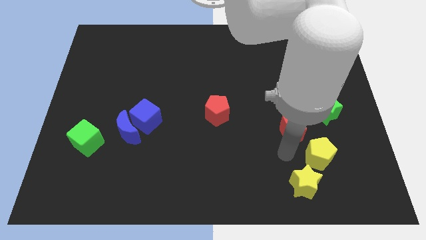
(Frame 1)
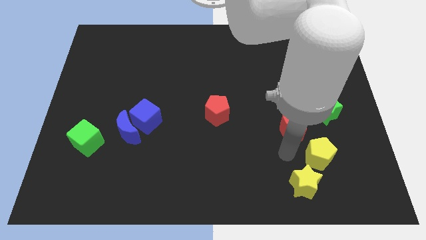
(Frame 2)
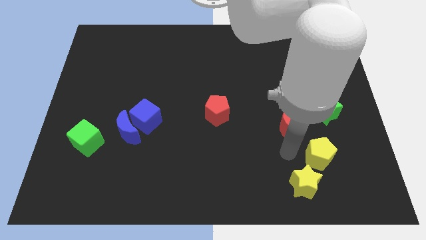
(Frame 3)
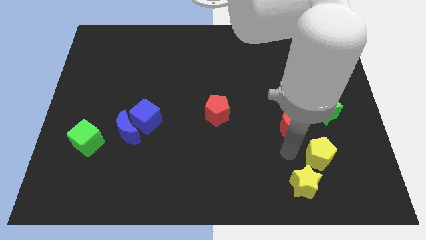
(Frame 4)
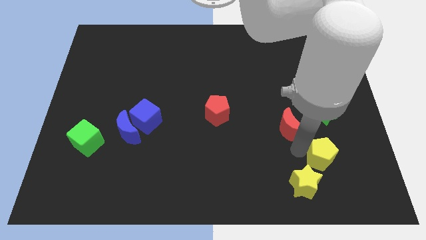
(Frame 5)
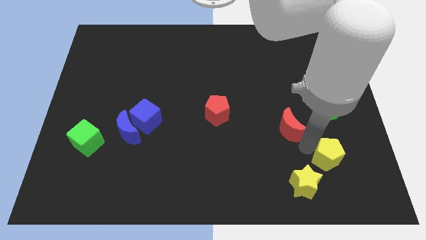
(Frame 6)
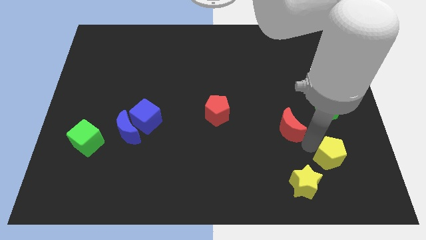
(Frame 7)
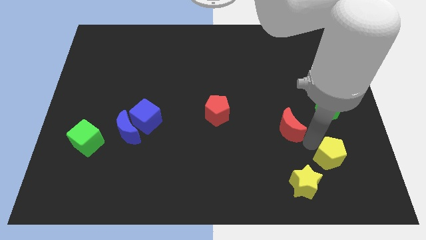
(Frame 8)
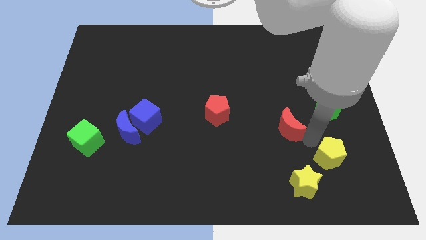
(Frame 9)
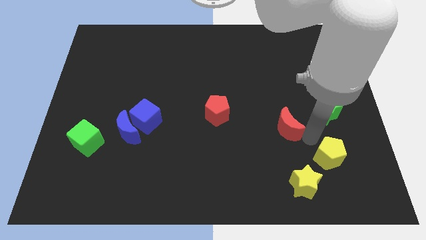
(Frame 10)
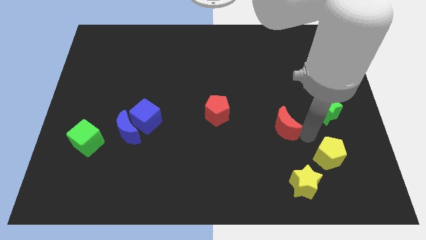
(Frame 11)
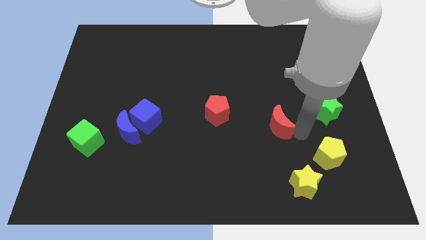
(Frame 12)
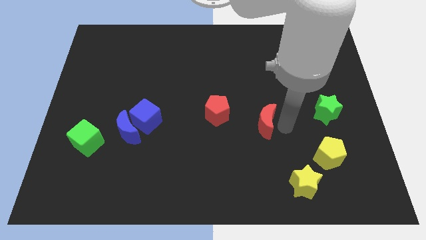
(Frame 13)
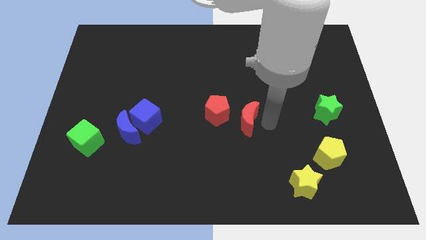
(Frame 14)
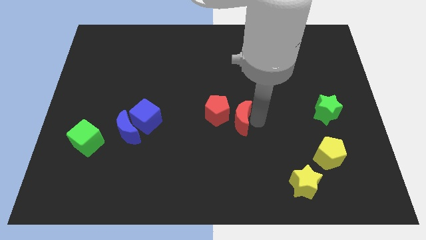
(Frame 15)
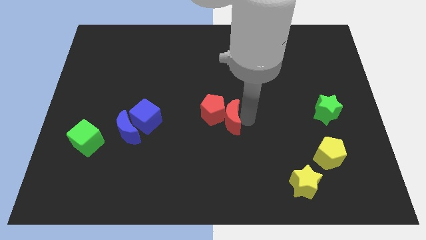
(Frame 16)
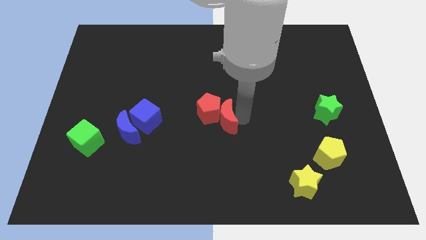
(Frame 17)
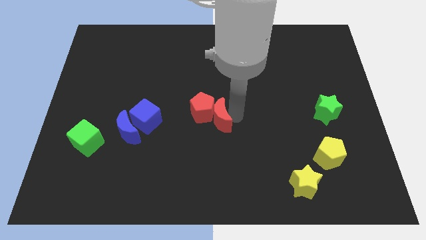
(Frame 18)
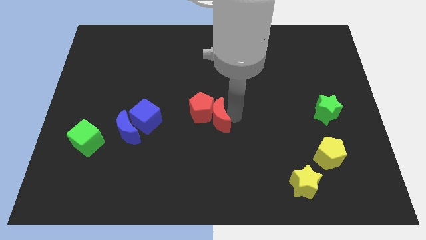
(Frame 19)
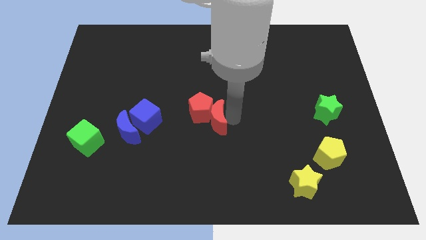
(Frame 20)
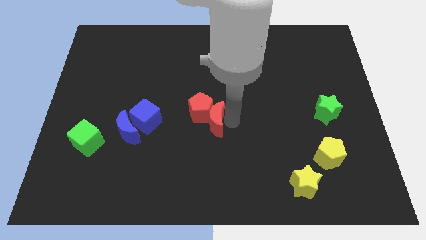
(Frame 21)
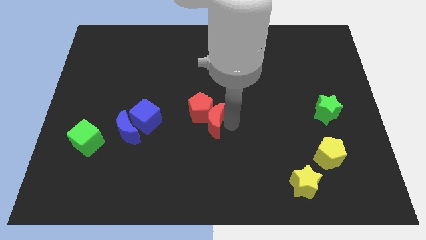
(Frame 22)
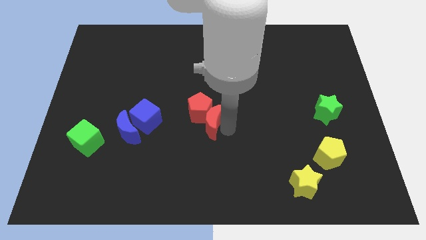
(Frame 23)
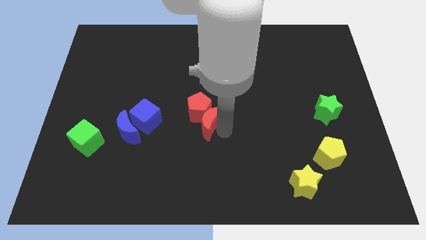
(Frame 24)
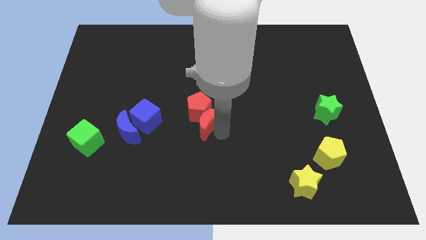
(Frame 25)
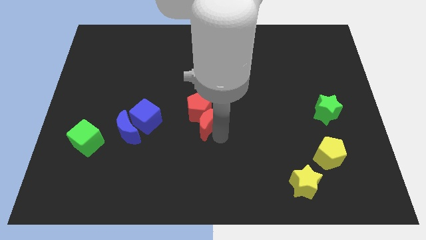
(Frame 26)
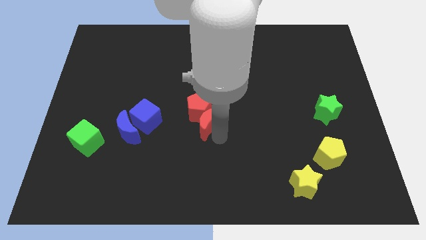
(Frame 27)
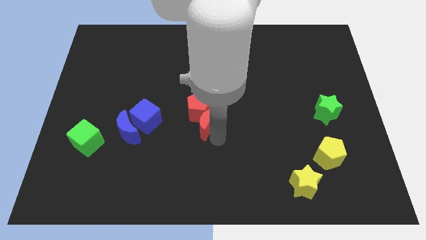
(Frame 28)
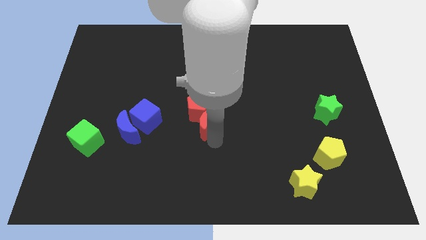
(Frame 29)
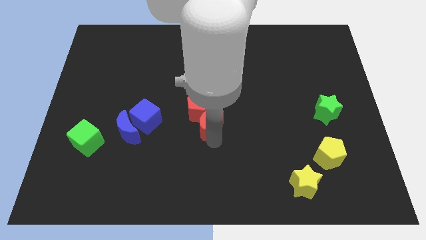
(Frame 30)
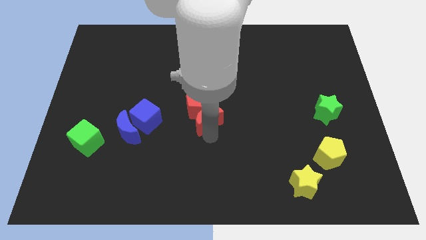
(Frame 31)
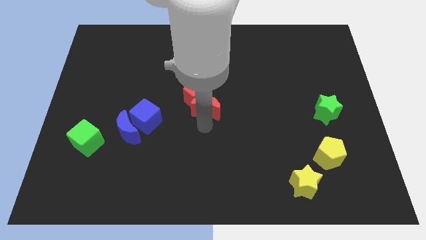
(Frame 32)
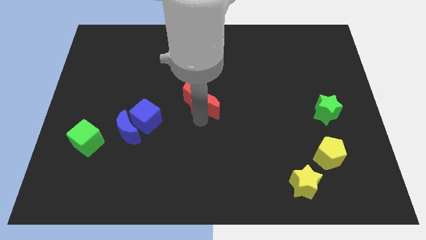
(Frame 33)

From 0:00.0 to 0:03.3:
push red blocks at center of the board

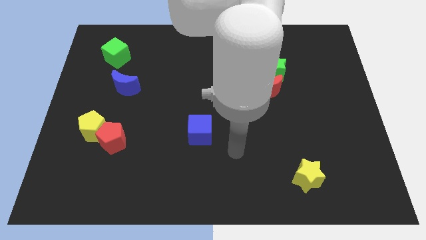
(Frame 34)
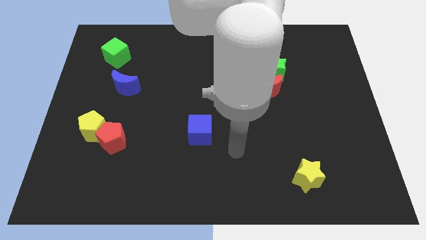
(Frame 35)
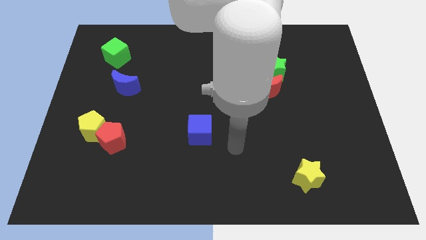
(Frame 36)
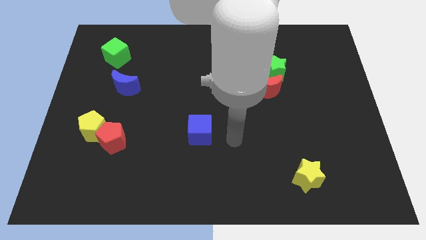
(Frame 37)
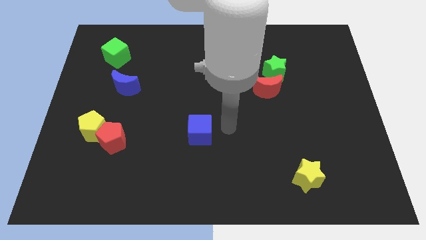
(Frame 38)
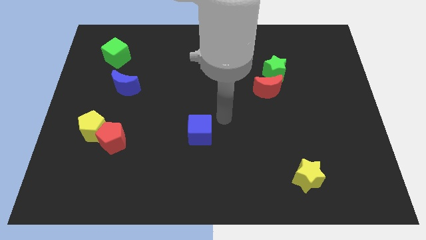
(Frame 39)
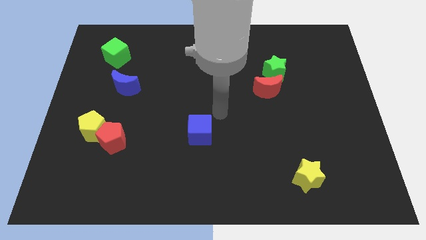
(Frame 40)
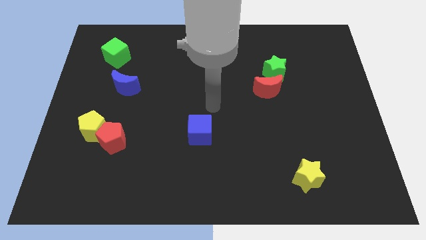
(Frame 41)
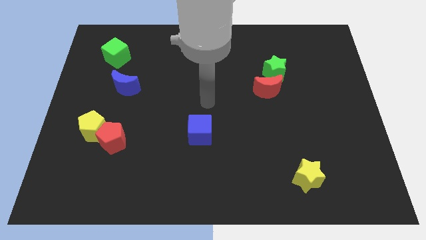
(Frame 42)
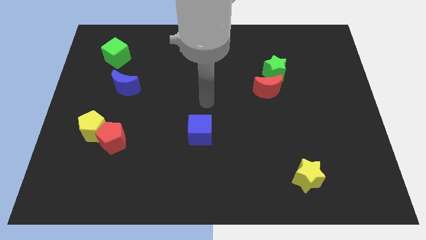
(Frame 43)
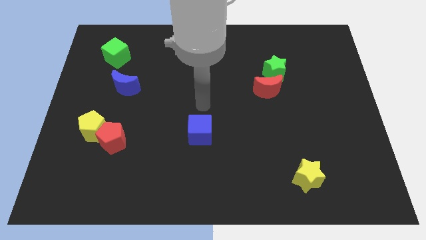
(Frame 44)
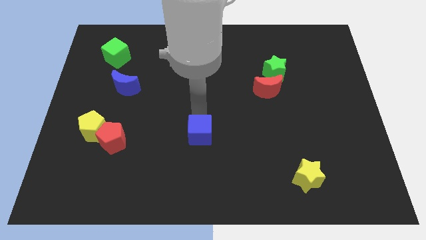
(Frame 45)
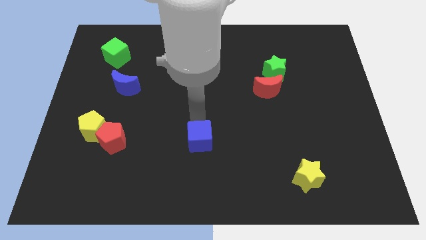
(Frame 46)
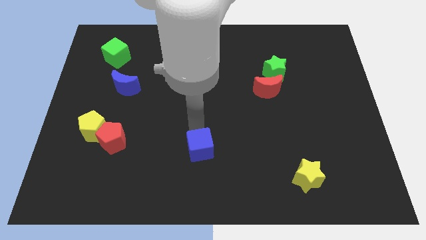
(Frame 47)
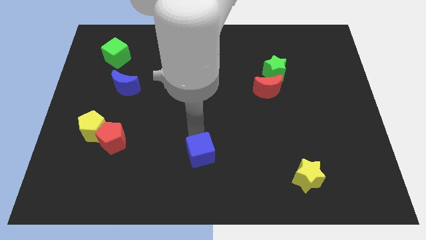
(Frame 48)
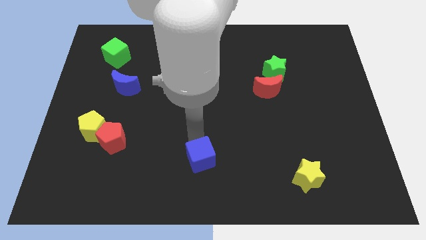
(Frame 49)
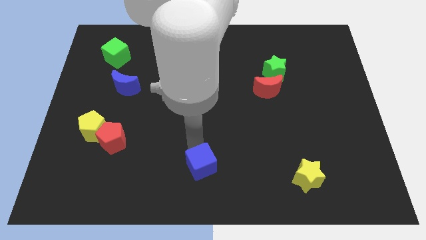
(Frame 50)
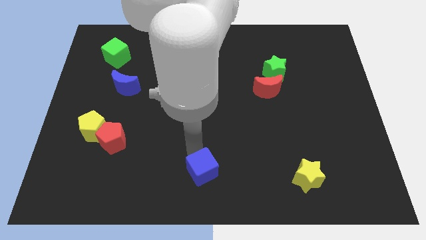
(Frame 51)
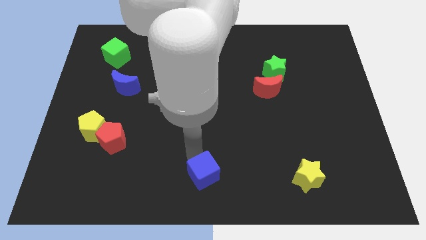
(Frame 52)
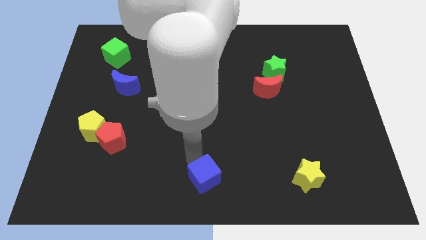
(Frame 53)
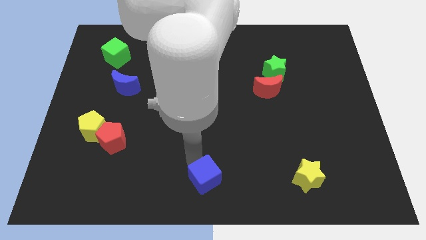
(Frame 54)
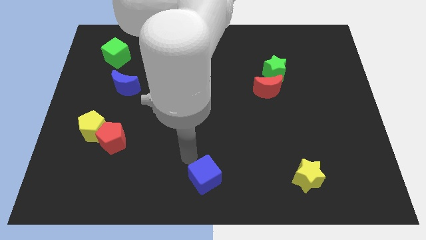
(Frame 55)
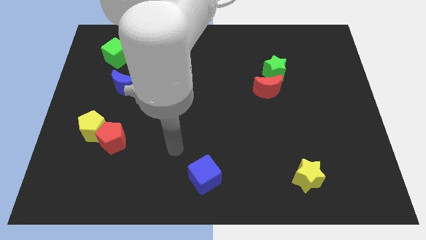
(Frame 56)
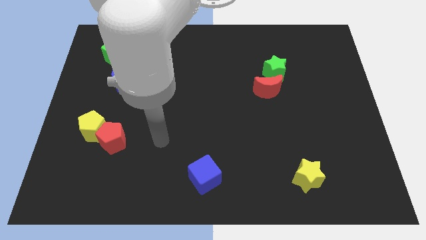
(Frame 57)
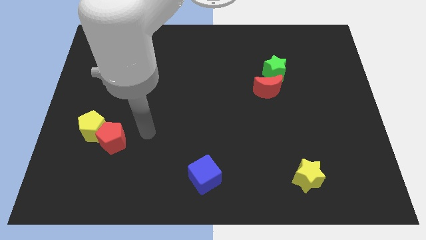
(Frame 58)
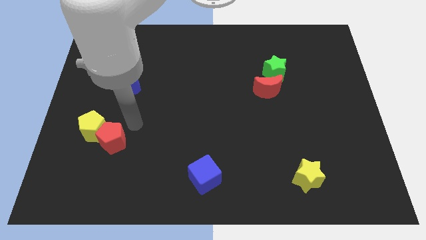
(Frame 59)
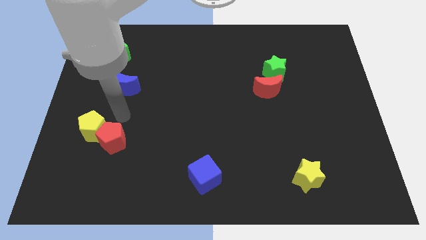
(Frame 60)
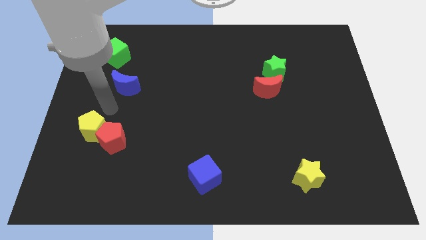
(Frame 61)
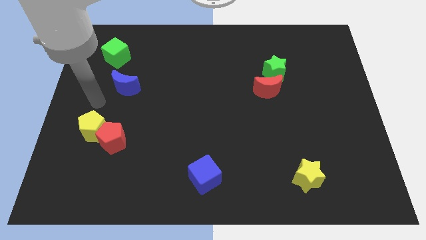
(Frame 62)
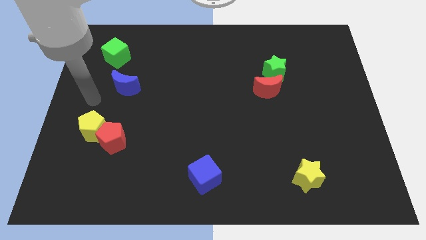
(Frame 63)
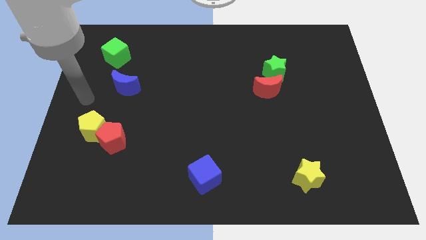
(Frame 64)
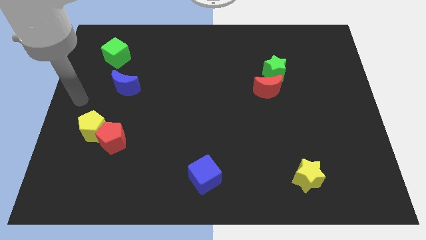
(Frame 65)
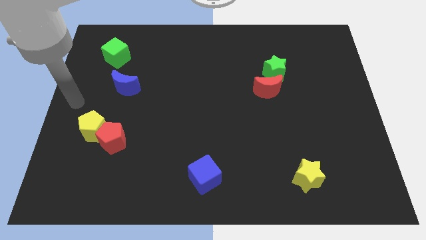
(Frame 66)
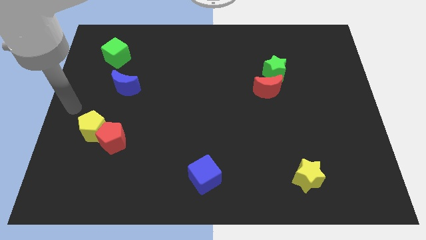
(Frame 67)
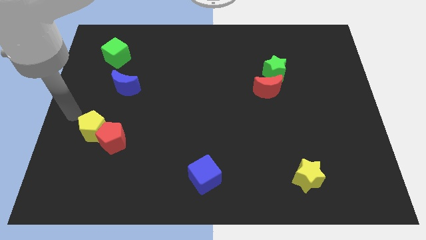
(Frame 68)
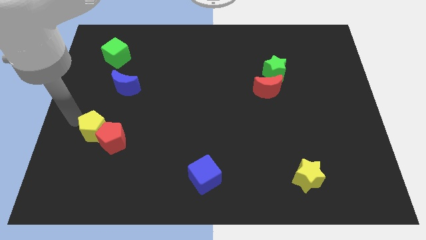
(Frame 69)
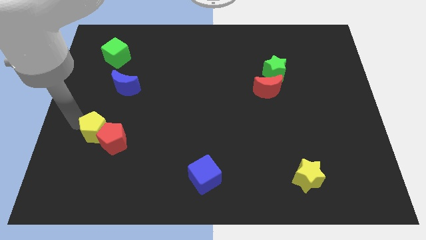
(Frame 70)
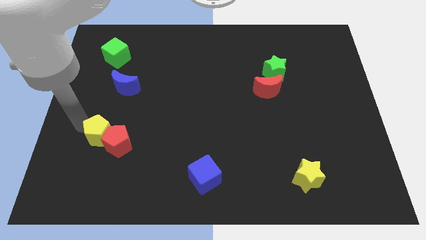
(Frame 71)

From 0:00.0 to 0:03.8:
point your arm left to yellow pentagon

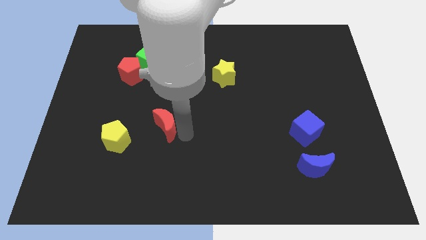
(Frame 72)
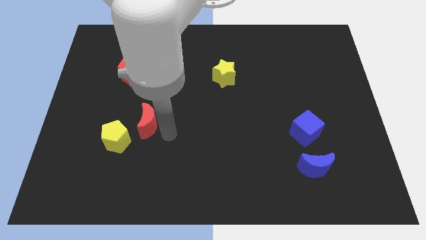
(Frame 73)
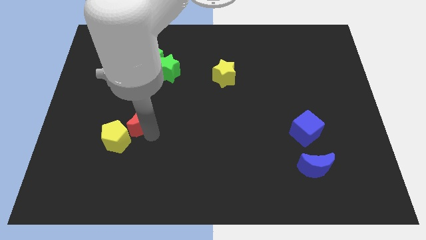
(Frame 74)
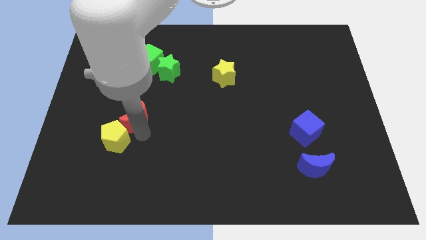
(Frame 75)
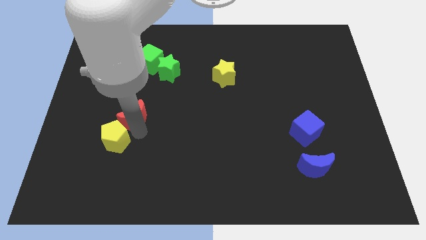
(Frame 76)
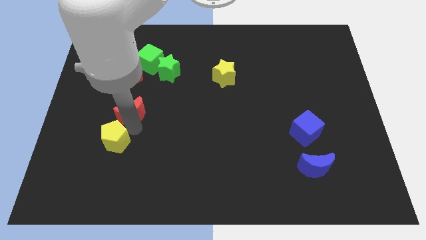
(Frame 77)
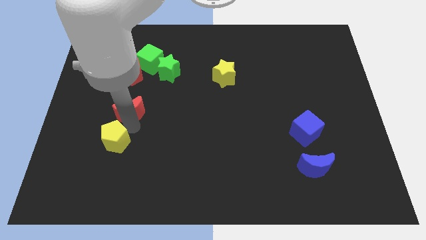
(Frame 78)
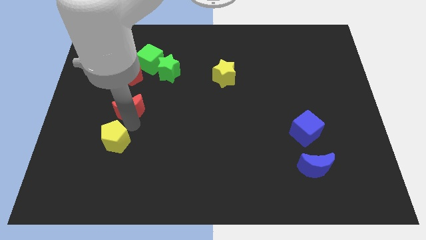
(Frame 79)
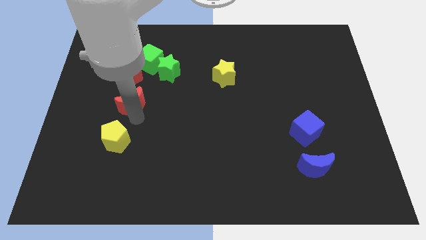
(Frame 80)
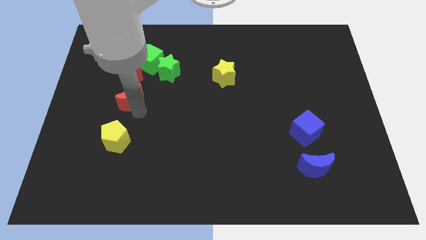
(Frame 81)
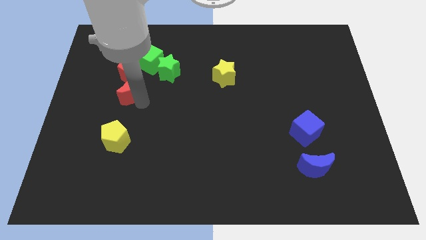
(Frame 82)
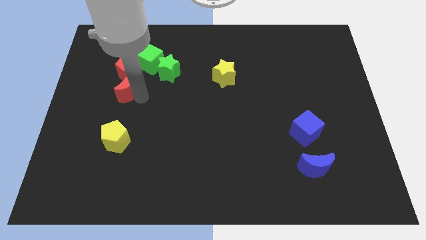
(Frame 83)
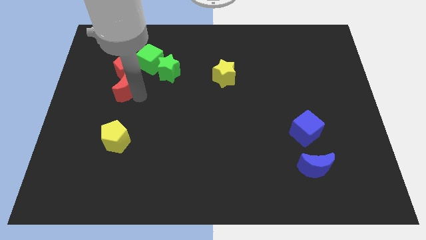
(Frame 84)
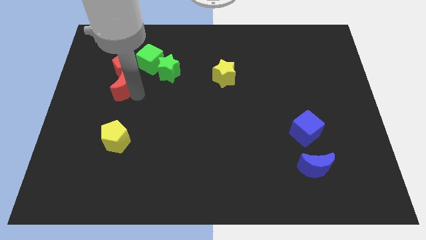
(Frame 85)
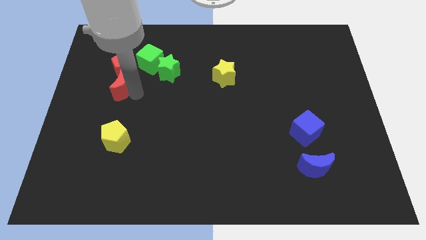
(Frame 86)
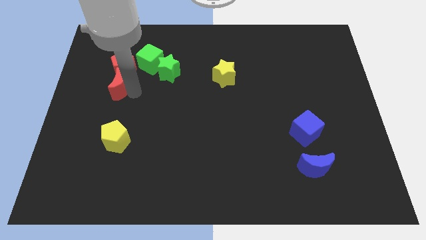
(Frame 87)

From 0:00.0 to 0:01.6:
push the red moon below the red pentagon

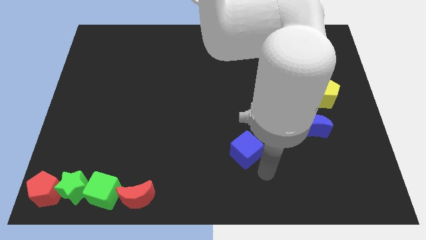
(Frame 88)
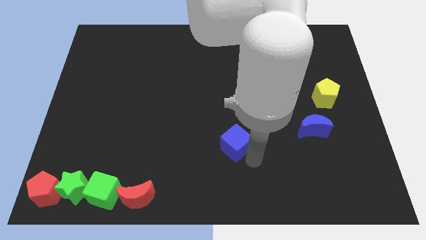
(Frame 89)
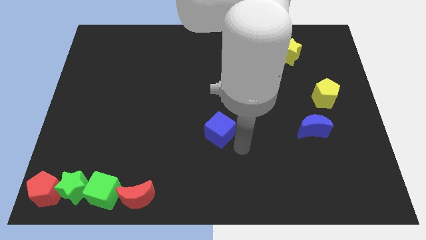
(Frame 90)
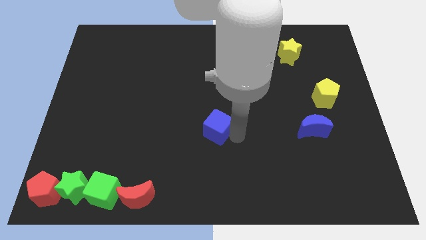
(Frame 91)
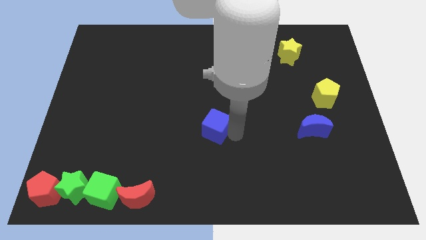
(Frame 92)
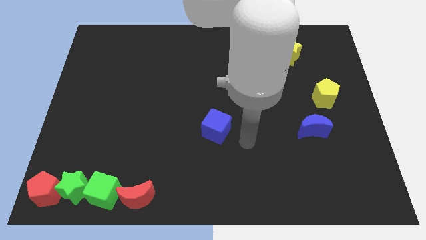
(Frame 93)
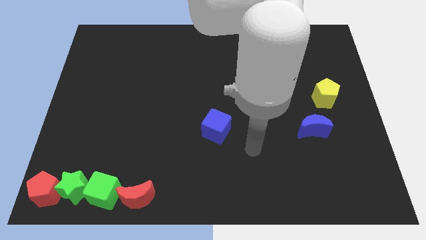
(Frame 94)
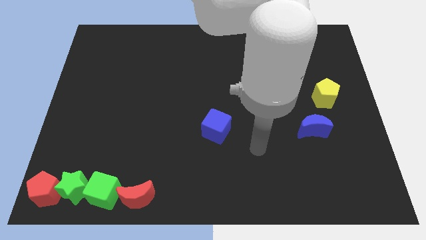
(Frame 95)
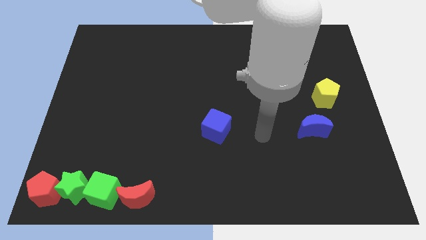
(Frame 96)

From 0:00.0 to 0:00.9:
move the blue cube to the center of the board
